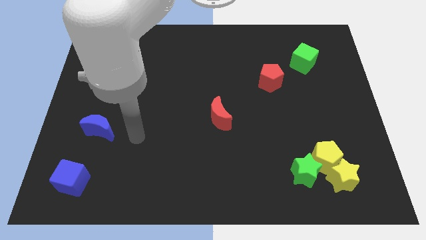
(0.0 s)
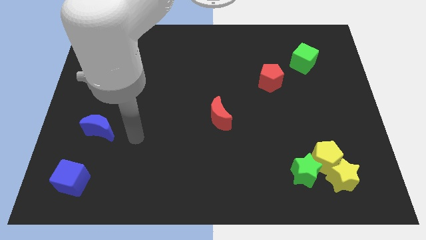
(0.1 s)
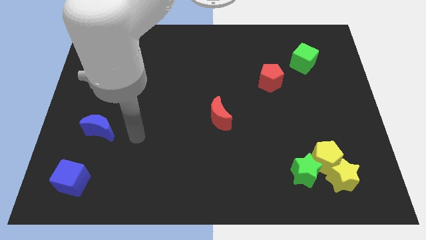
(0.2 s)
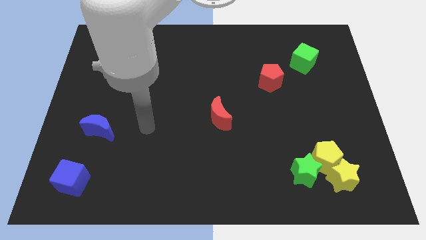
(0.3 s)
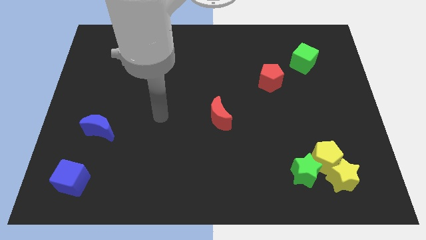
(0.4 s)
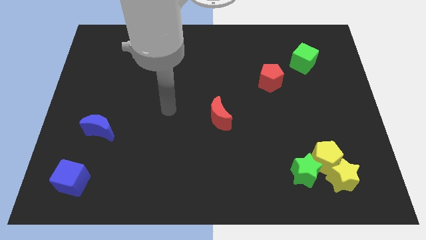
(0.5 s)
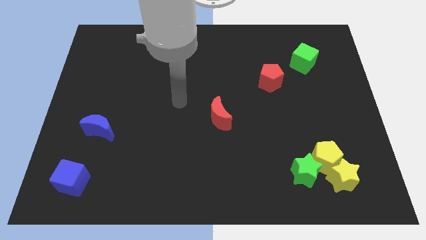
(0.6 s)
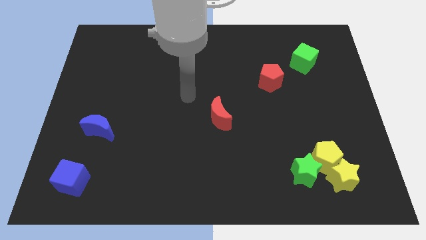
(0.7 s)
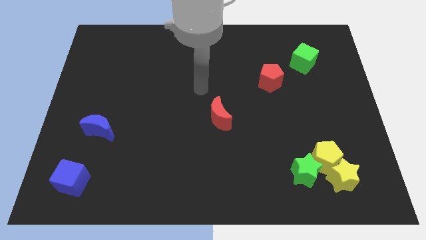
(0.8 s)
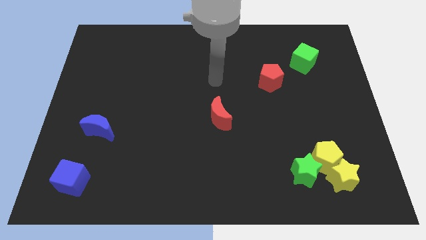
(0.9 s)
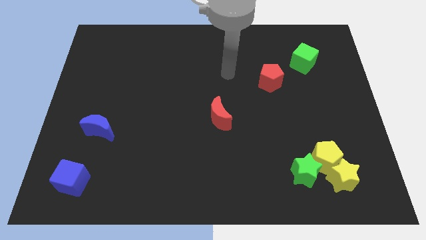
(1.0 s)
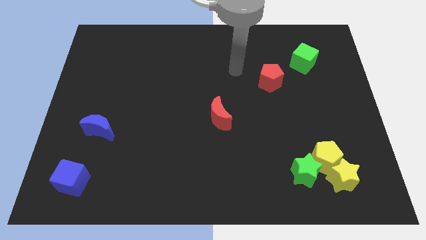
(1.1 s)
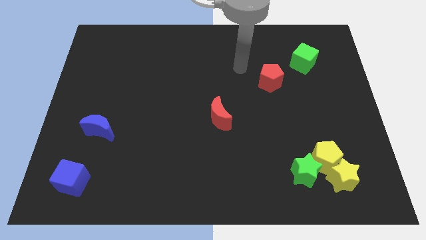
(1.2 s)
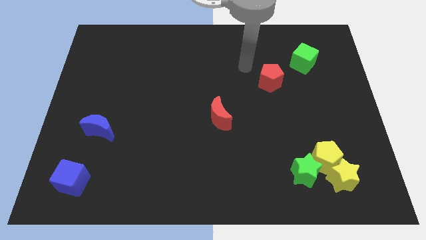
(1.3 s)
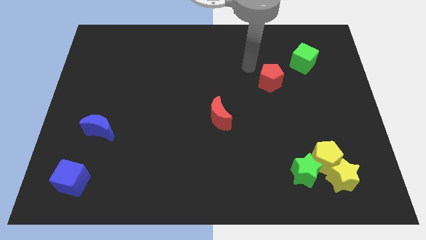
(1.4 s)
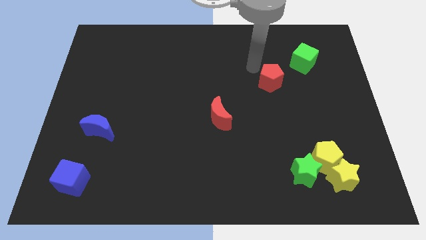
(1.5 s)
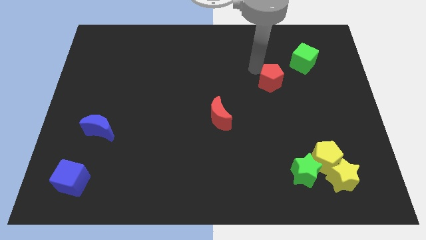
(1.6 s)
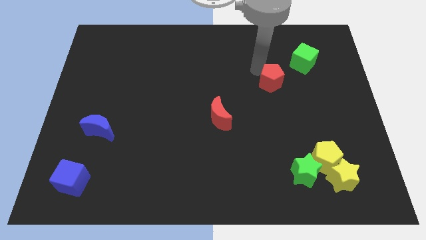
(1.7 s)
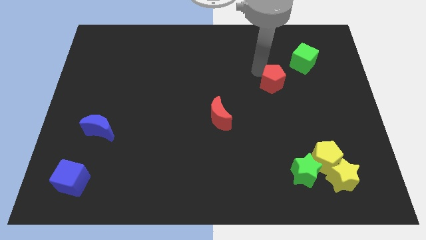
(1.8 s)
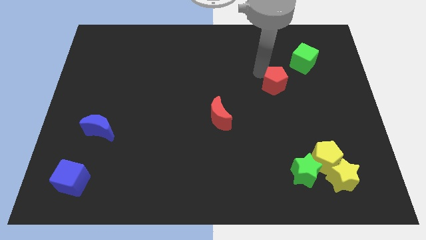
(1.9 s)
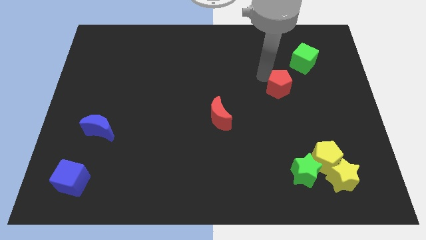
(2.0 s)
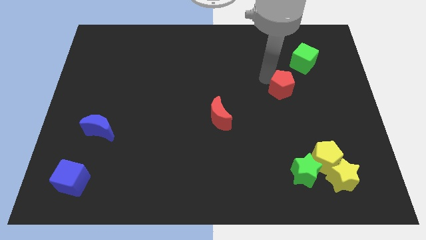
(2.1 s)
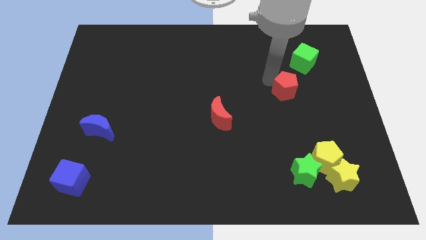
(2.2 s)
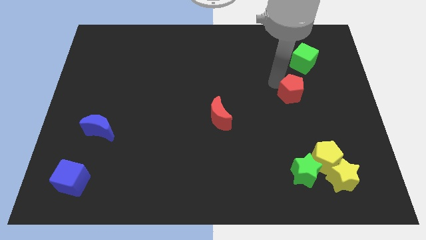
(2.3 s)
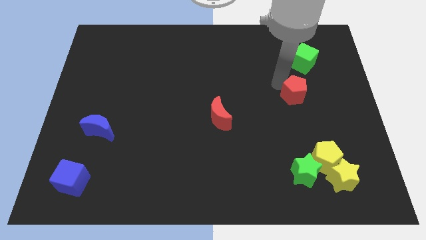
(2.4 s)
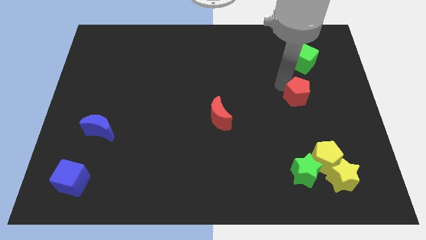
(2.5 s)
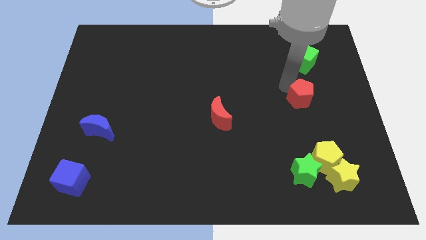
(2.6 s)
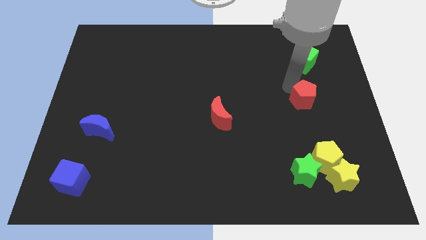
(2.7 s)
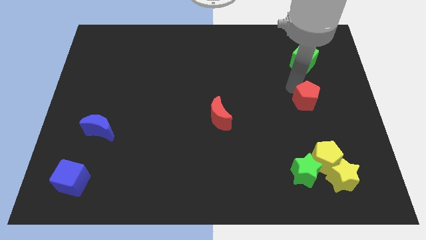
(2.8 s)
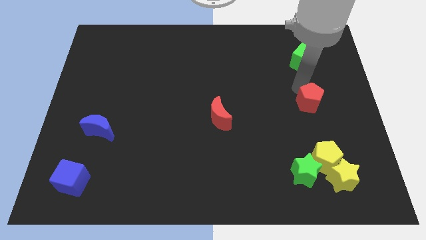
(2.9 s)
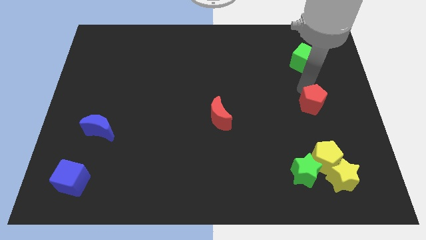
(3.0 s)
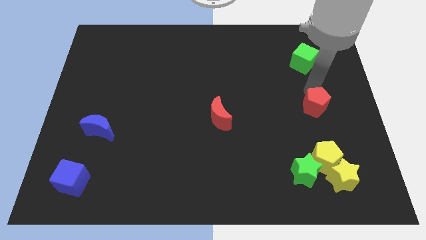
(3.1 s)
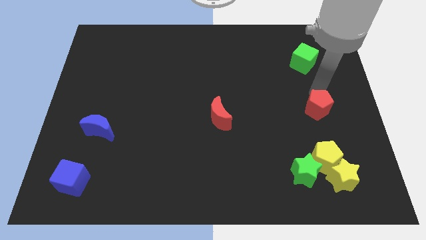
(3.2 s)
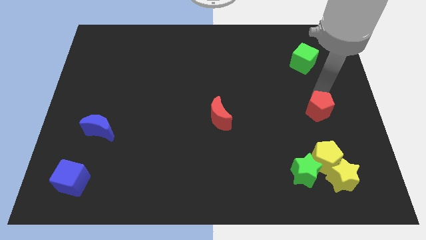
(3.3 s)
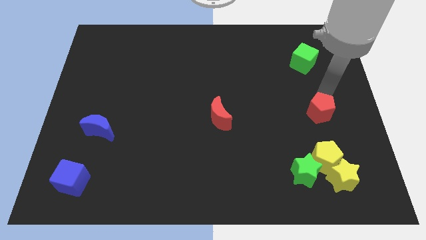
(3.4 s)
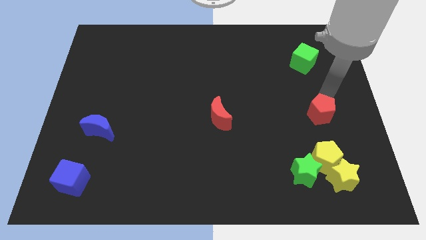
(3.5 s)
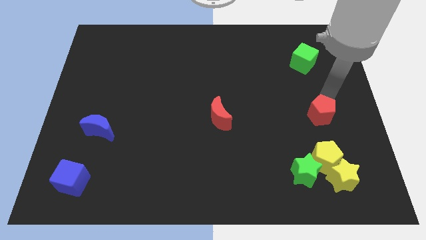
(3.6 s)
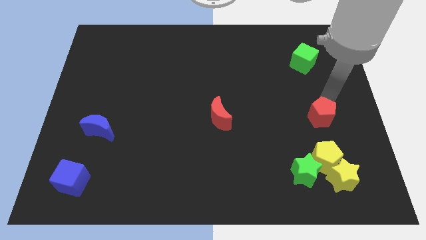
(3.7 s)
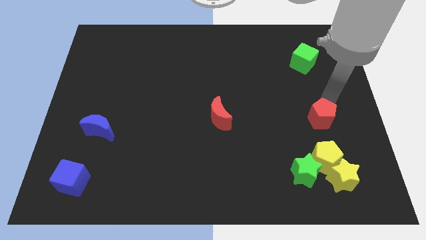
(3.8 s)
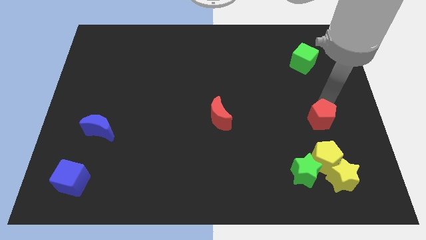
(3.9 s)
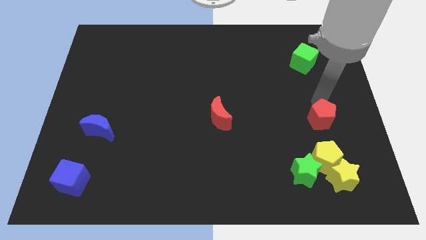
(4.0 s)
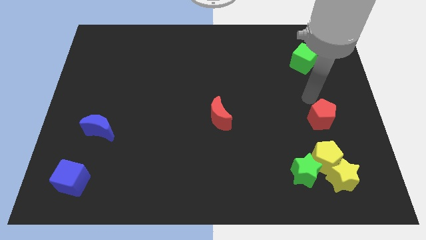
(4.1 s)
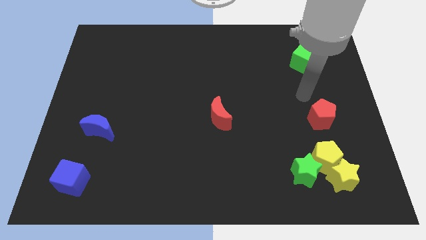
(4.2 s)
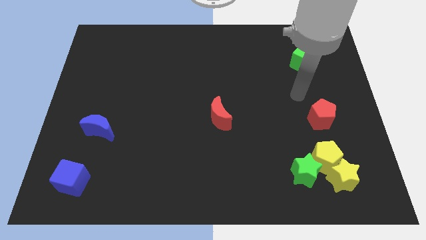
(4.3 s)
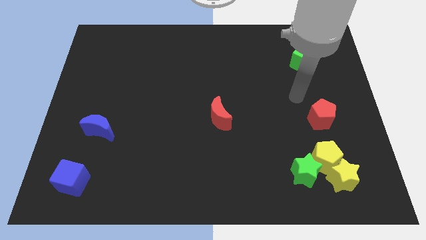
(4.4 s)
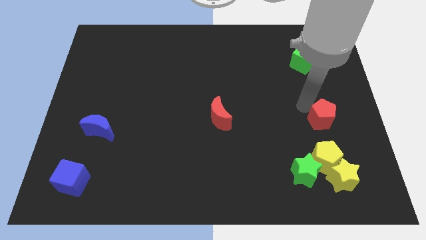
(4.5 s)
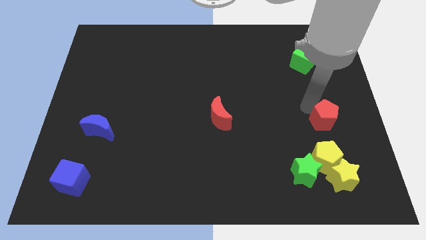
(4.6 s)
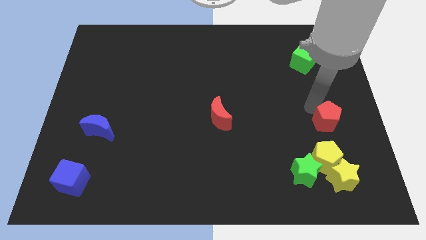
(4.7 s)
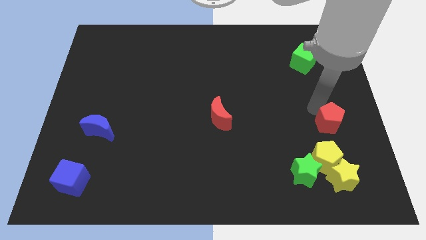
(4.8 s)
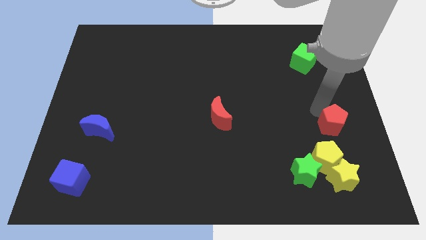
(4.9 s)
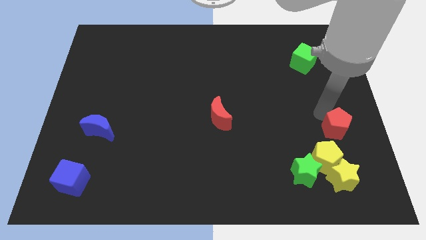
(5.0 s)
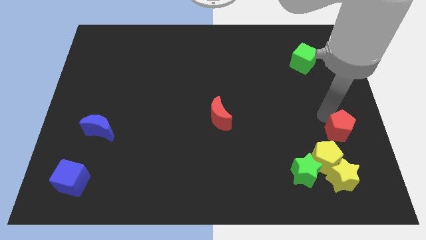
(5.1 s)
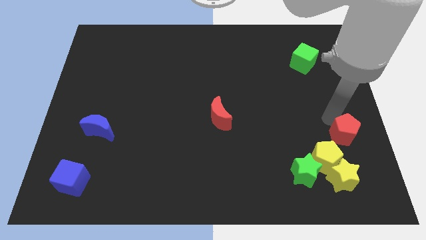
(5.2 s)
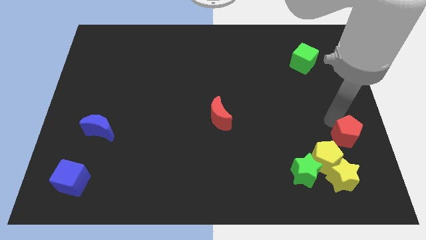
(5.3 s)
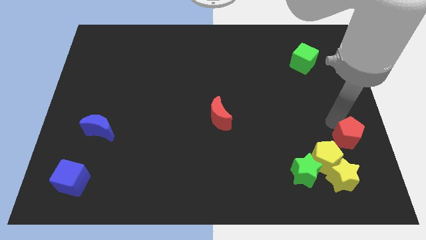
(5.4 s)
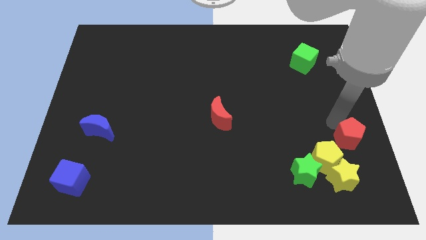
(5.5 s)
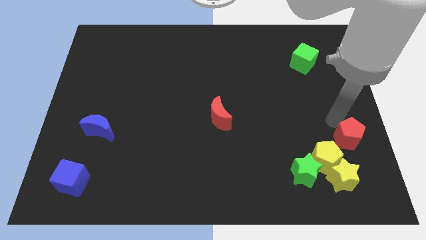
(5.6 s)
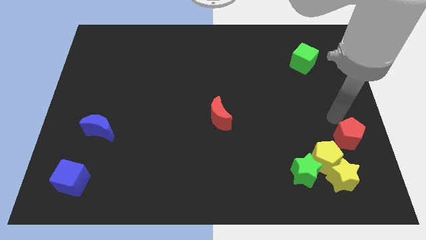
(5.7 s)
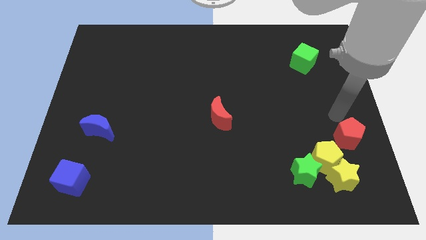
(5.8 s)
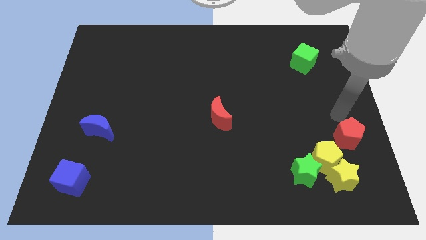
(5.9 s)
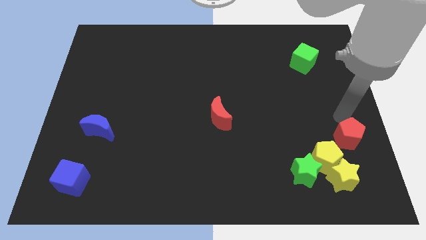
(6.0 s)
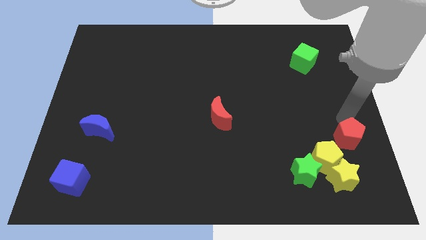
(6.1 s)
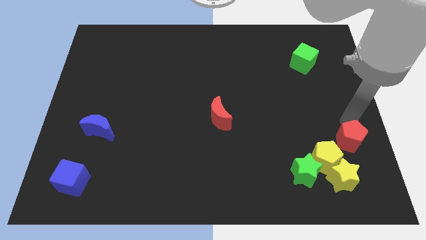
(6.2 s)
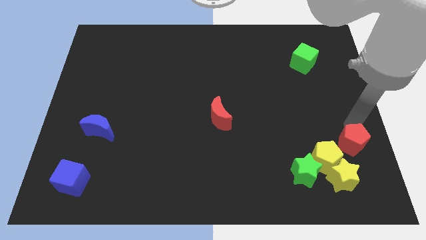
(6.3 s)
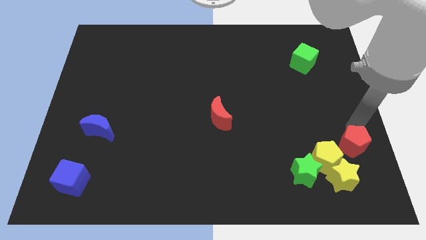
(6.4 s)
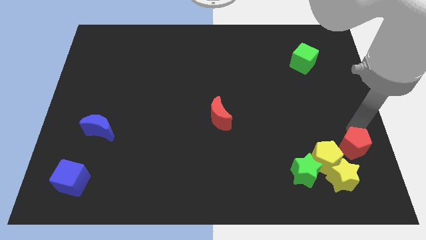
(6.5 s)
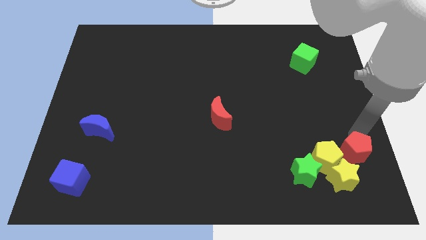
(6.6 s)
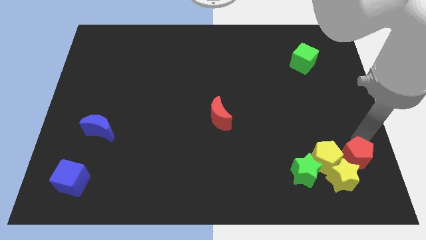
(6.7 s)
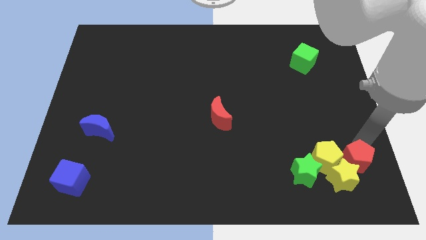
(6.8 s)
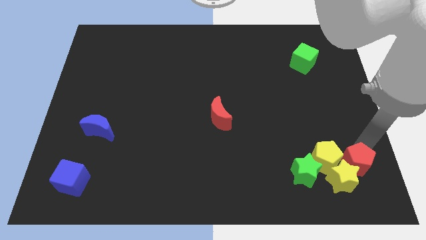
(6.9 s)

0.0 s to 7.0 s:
put the red pentagon next to the yellow star

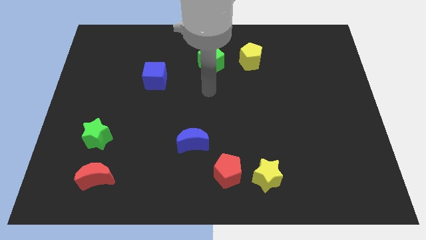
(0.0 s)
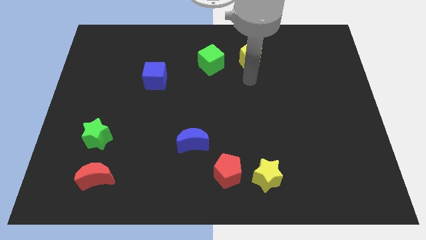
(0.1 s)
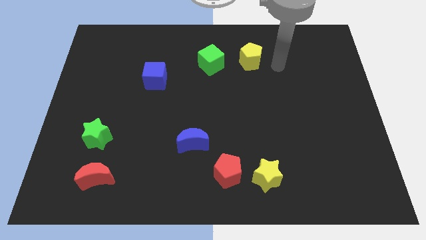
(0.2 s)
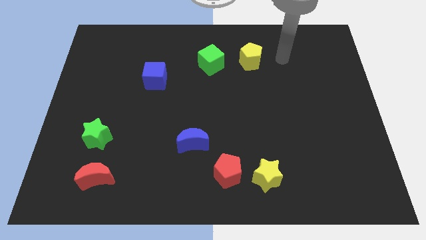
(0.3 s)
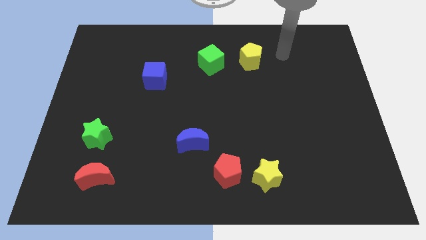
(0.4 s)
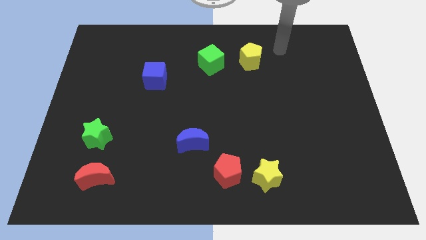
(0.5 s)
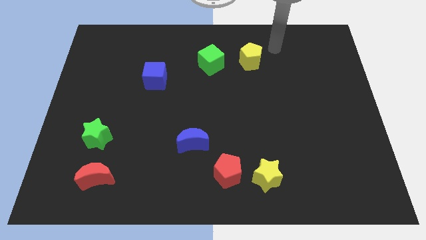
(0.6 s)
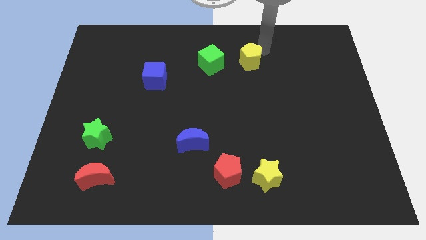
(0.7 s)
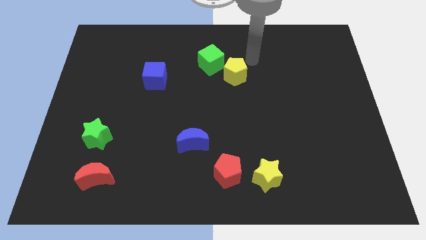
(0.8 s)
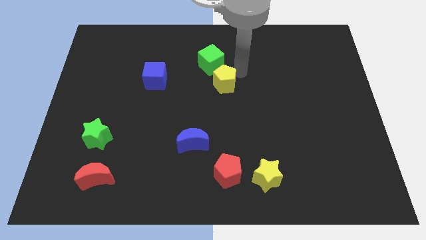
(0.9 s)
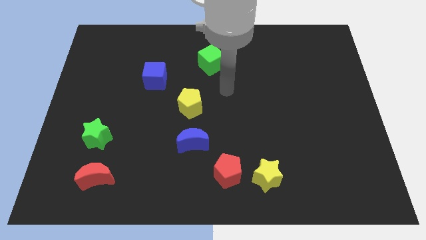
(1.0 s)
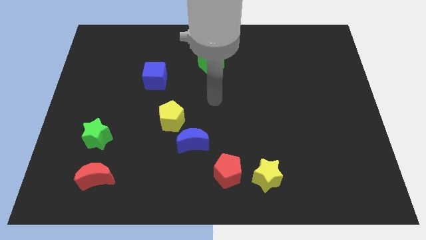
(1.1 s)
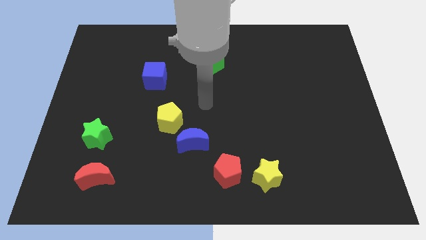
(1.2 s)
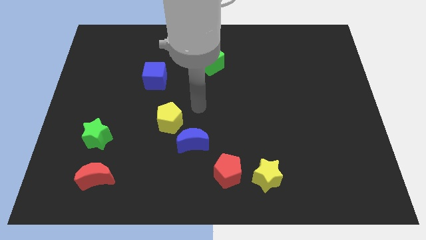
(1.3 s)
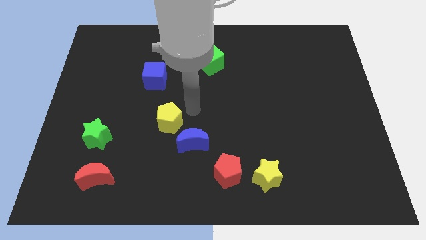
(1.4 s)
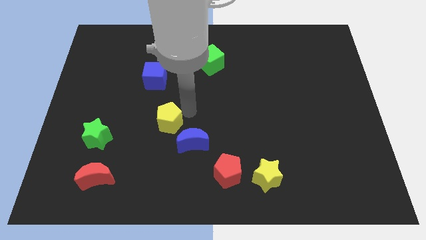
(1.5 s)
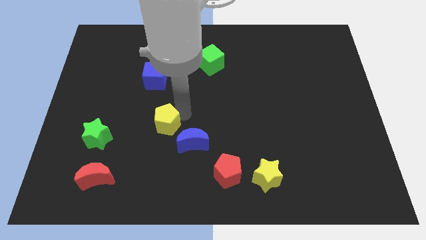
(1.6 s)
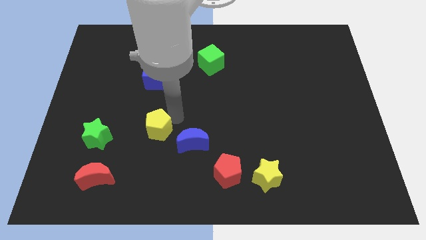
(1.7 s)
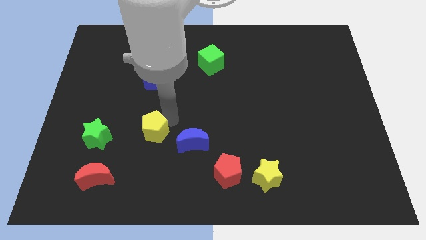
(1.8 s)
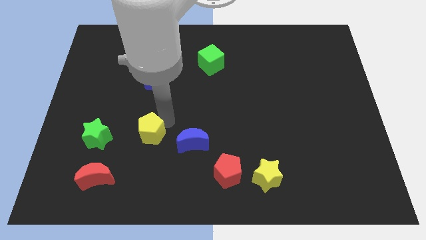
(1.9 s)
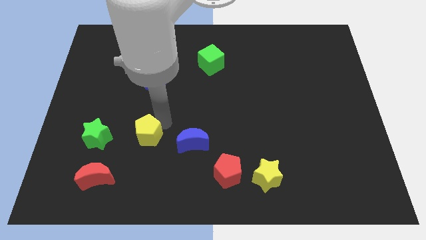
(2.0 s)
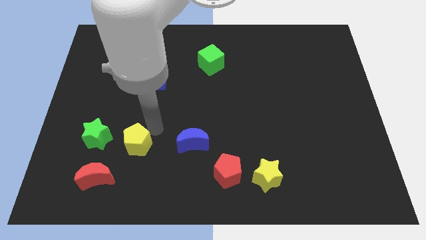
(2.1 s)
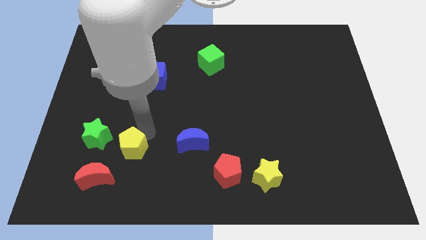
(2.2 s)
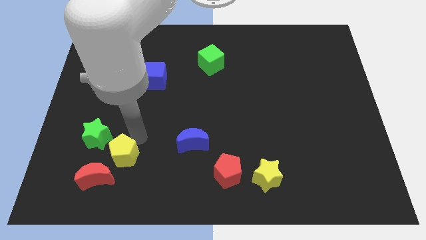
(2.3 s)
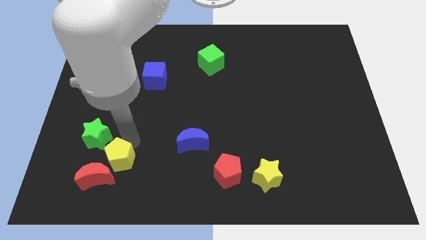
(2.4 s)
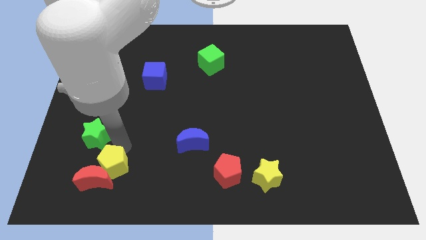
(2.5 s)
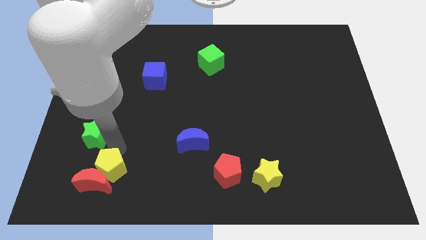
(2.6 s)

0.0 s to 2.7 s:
slide the yellow pentagon close to the red moon
